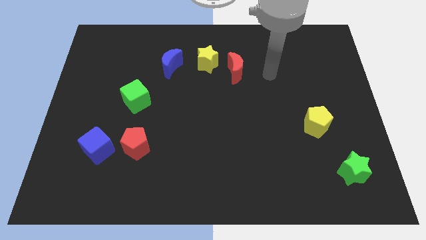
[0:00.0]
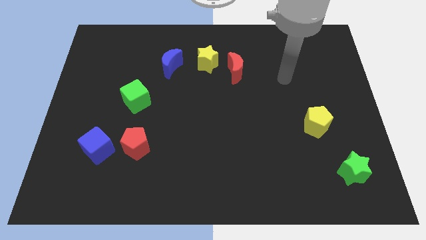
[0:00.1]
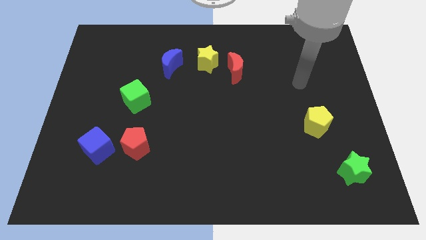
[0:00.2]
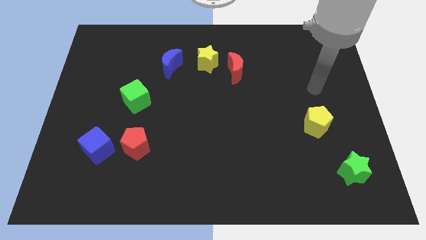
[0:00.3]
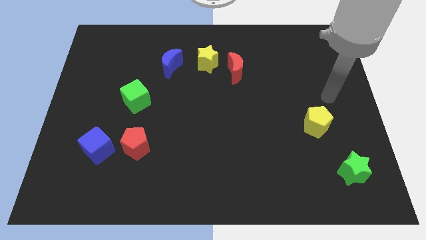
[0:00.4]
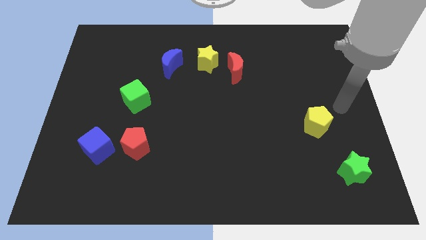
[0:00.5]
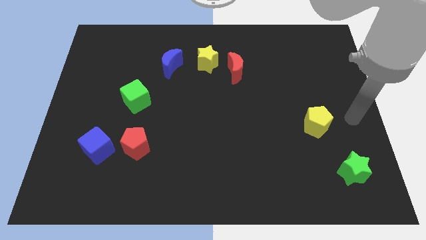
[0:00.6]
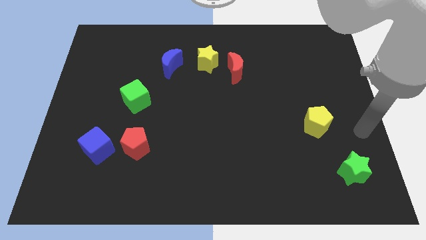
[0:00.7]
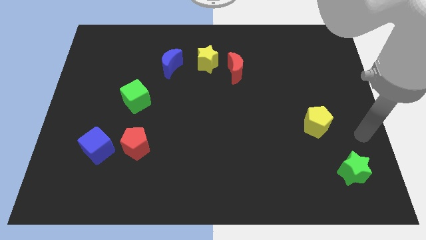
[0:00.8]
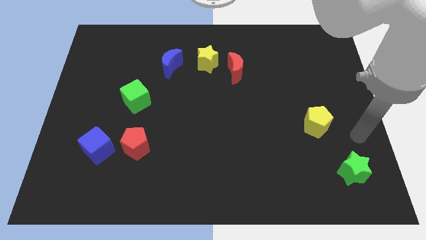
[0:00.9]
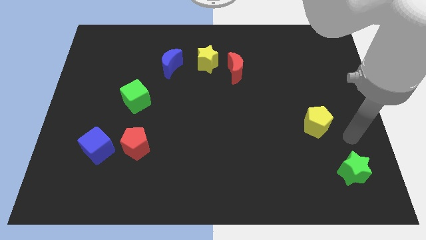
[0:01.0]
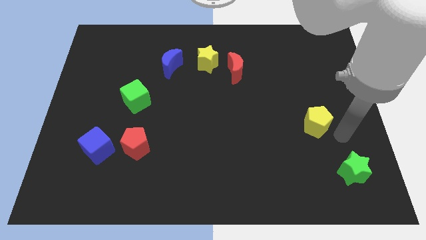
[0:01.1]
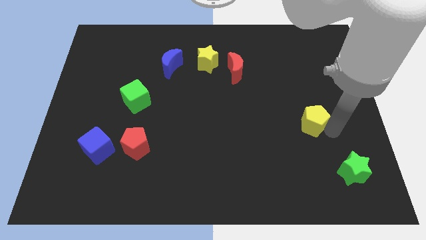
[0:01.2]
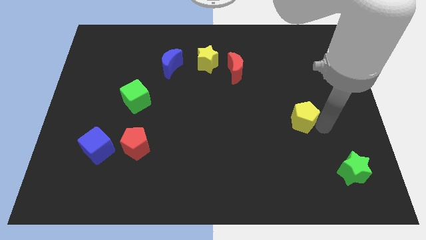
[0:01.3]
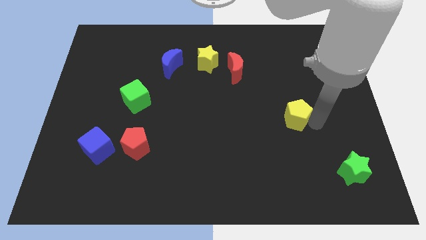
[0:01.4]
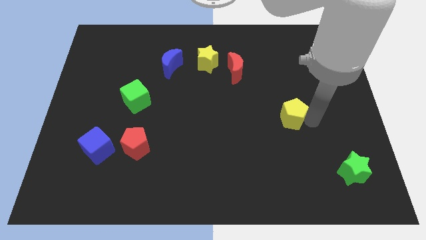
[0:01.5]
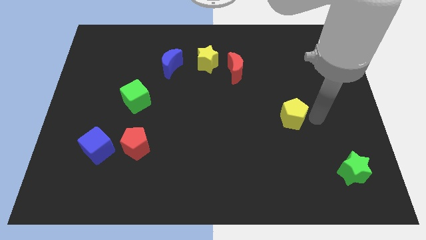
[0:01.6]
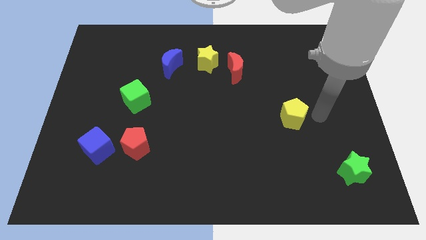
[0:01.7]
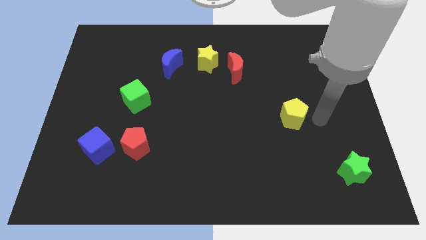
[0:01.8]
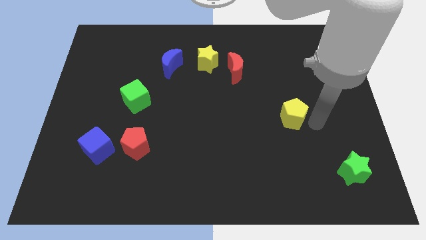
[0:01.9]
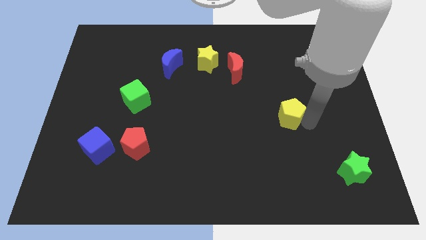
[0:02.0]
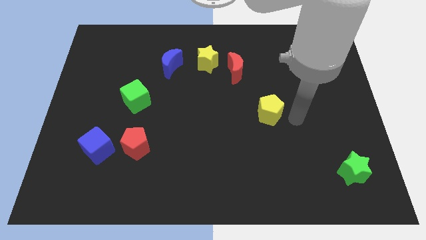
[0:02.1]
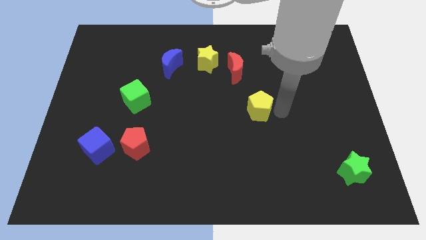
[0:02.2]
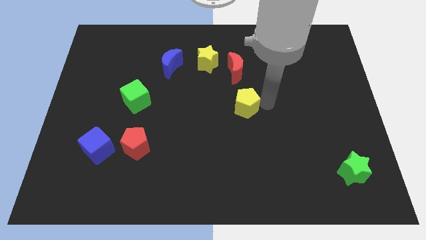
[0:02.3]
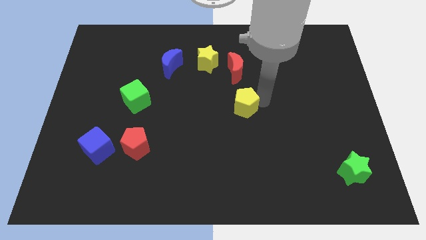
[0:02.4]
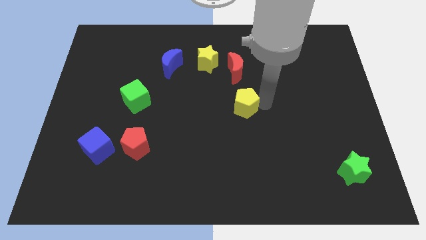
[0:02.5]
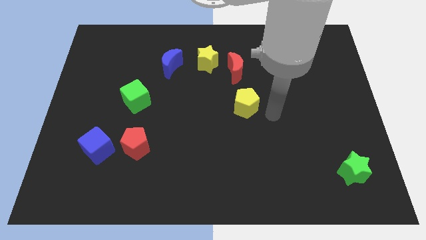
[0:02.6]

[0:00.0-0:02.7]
move the yellow pentagon diagonally below the red moon

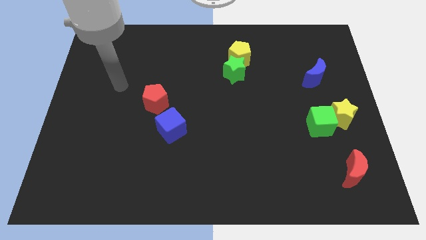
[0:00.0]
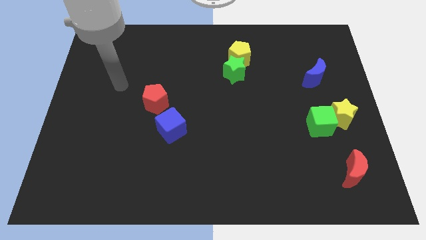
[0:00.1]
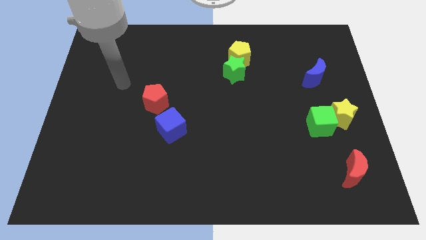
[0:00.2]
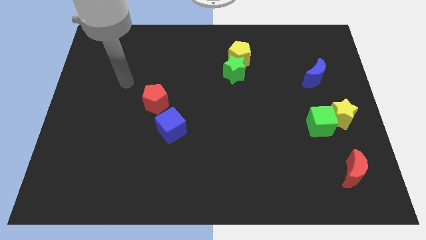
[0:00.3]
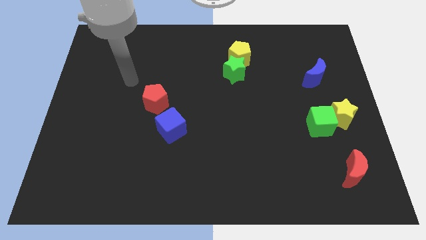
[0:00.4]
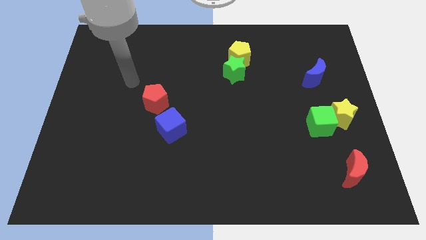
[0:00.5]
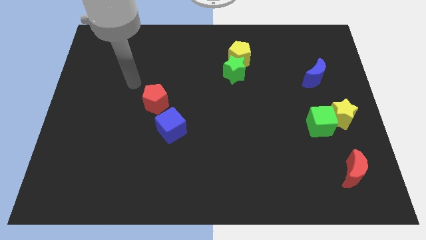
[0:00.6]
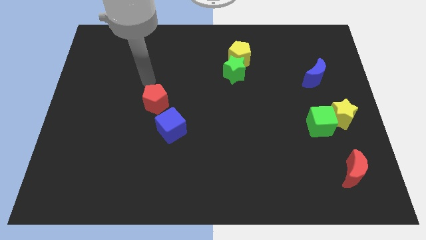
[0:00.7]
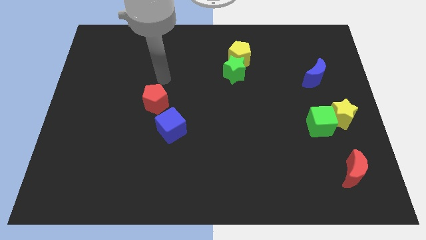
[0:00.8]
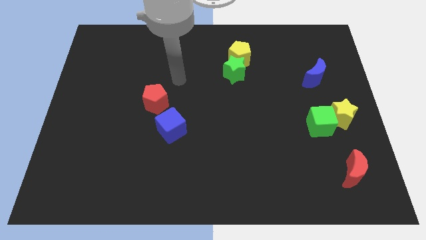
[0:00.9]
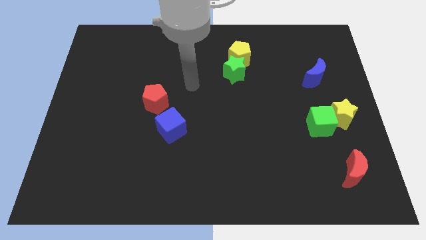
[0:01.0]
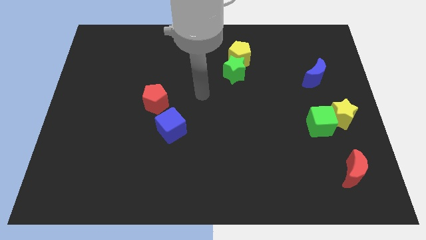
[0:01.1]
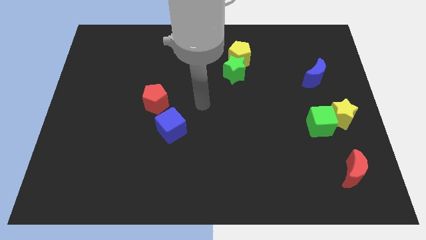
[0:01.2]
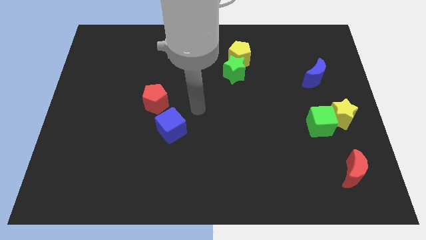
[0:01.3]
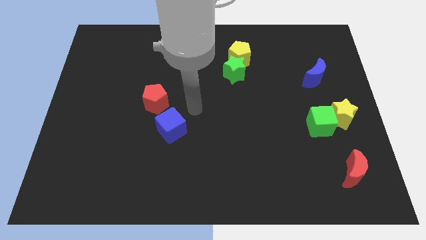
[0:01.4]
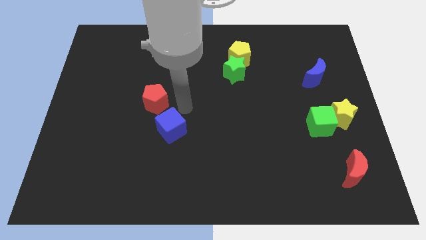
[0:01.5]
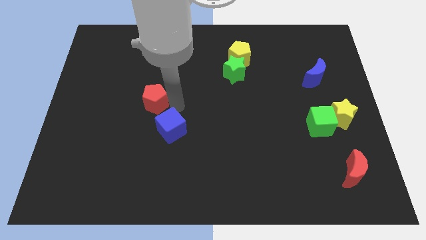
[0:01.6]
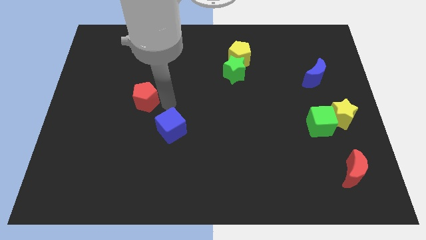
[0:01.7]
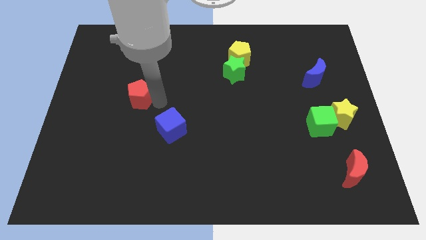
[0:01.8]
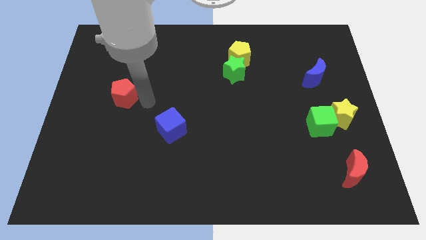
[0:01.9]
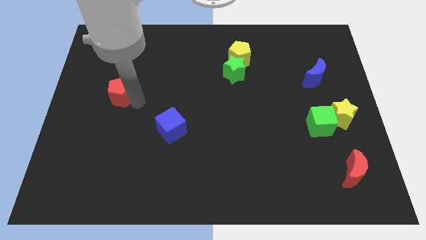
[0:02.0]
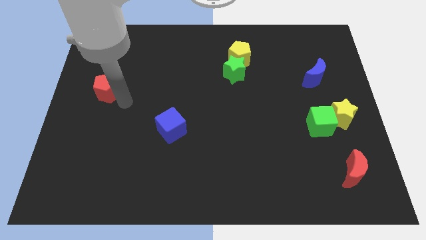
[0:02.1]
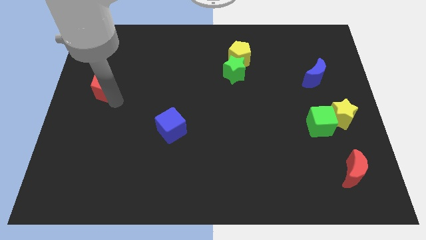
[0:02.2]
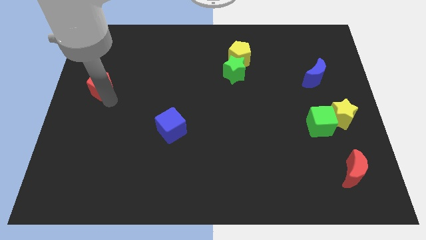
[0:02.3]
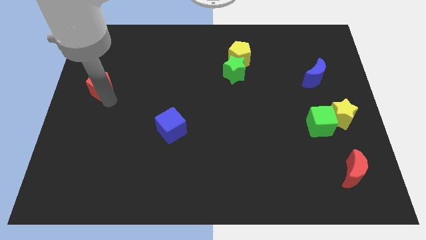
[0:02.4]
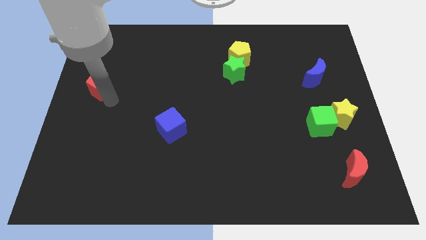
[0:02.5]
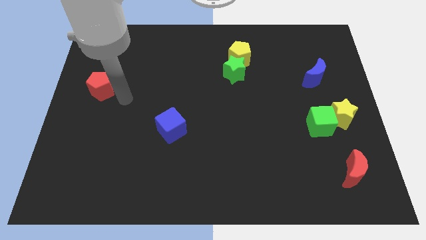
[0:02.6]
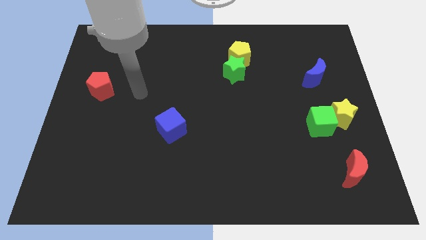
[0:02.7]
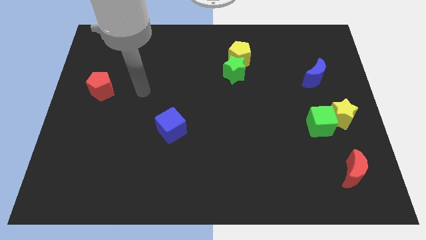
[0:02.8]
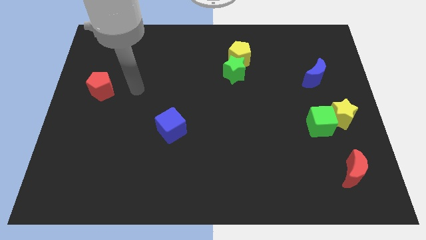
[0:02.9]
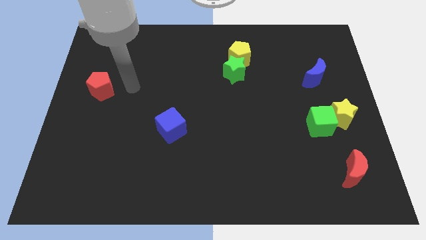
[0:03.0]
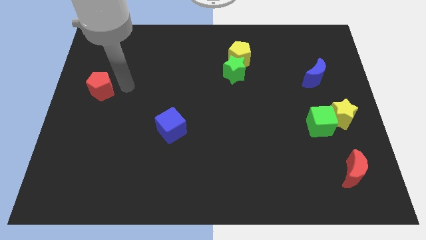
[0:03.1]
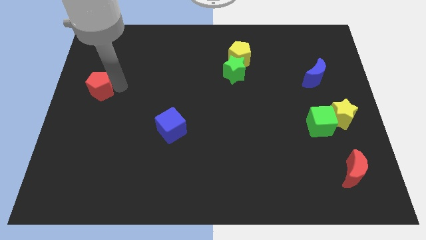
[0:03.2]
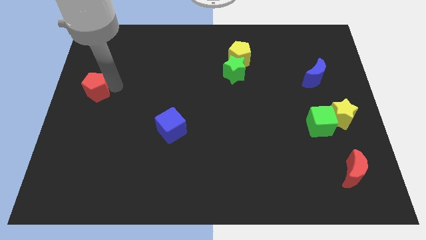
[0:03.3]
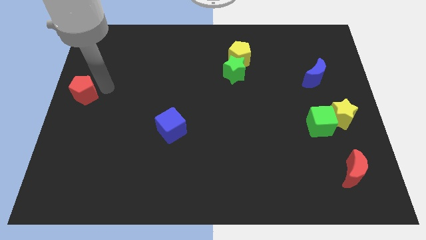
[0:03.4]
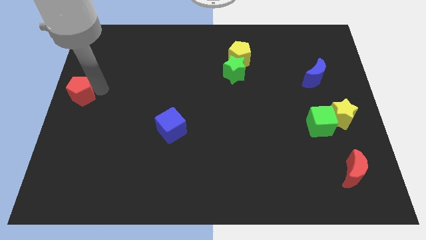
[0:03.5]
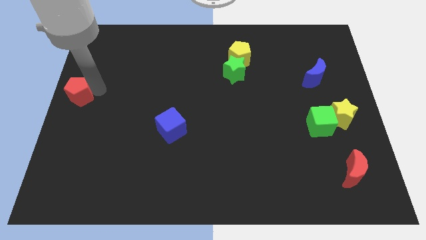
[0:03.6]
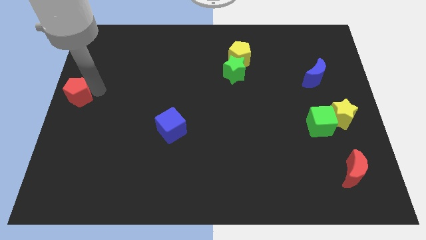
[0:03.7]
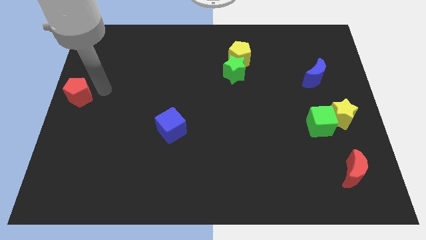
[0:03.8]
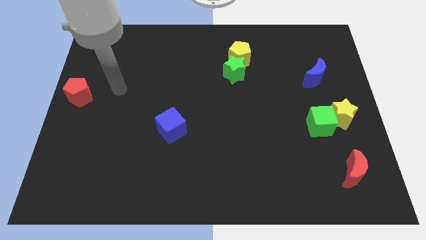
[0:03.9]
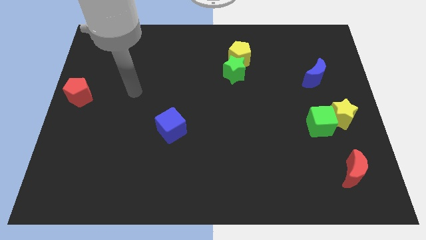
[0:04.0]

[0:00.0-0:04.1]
place red pentagon to the left center of the board

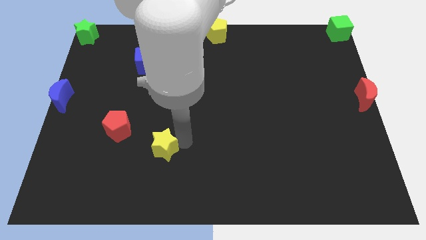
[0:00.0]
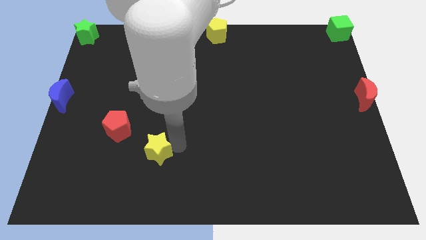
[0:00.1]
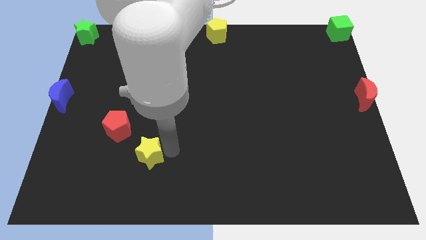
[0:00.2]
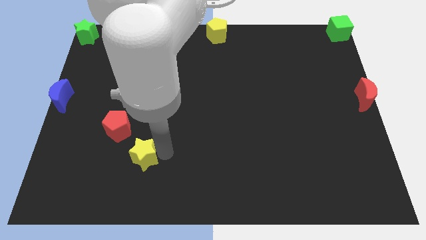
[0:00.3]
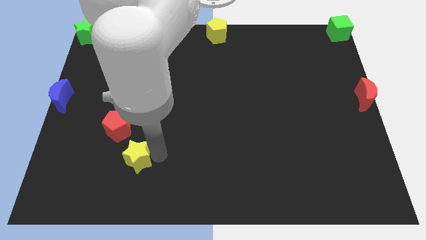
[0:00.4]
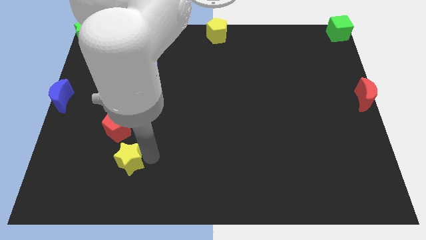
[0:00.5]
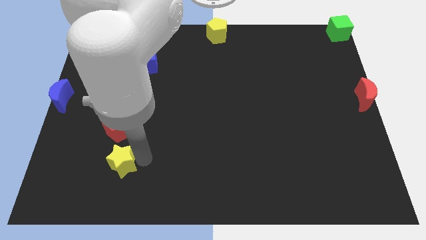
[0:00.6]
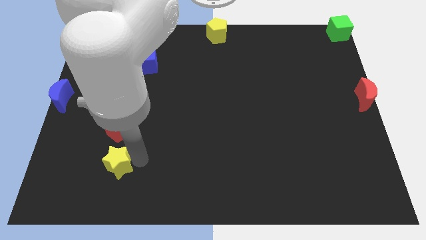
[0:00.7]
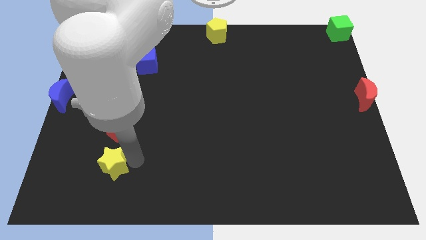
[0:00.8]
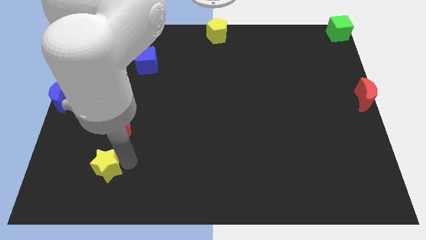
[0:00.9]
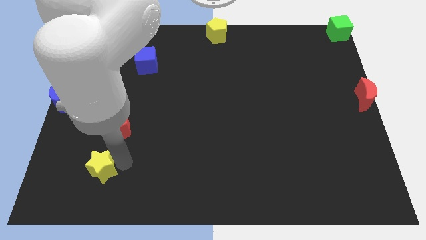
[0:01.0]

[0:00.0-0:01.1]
place the yellow sar below the red pentagon

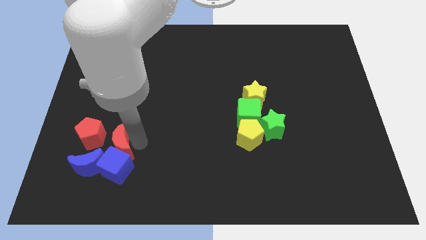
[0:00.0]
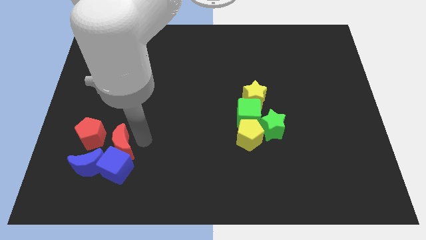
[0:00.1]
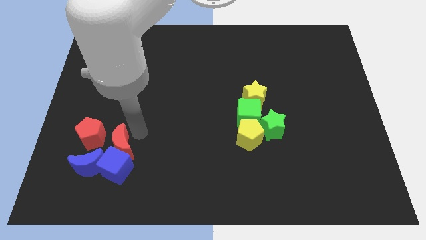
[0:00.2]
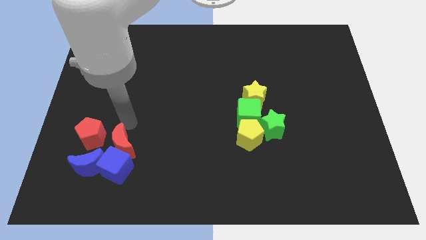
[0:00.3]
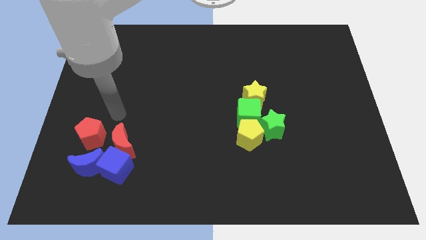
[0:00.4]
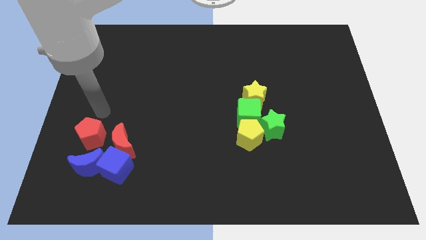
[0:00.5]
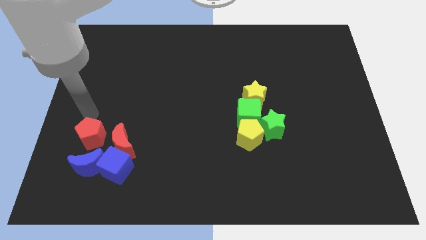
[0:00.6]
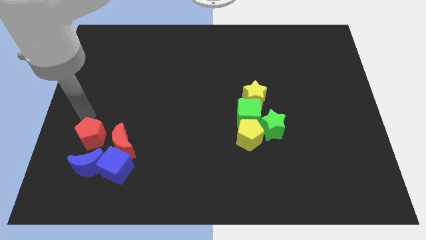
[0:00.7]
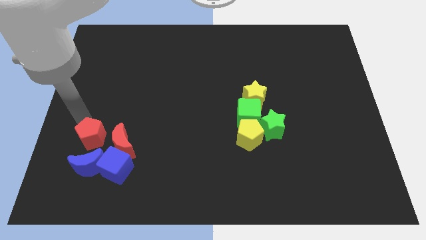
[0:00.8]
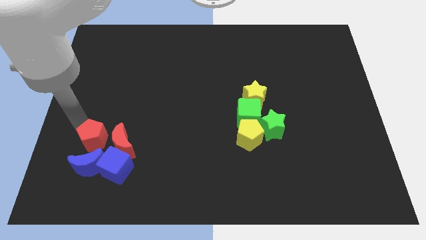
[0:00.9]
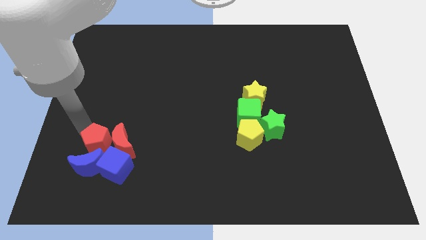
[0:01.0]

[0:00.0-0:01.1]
move red pentagon to the left of red moon
